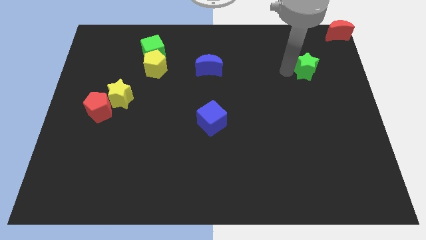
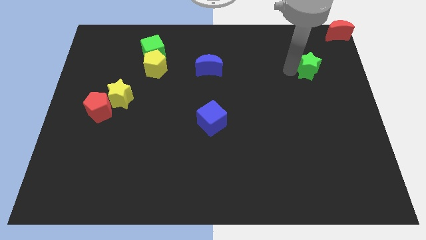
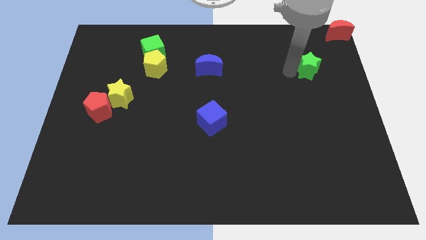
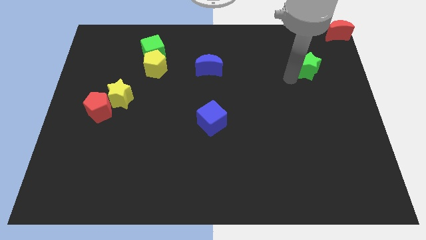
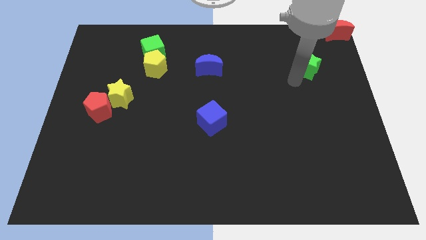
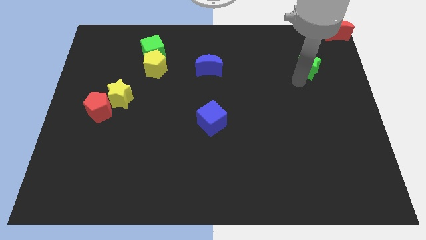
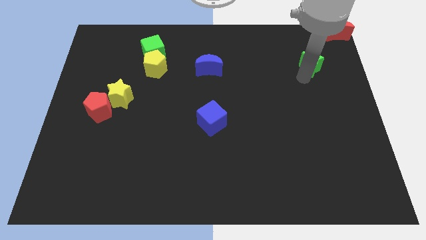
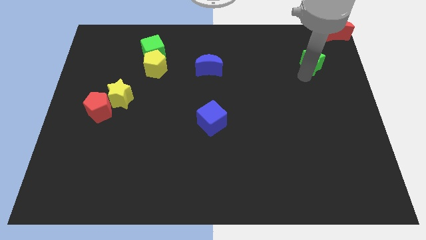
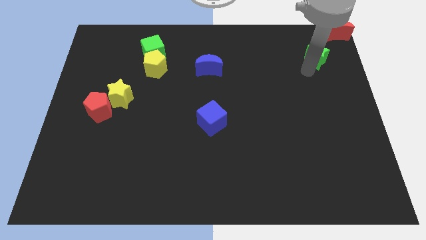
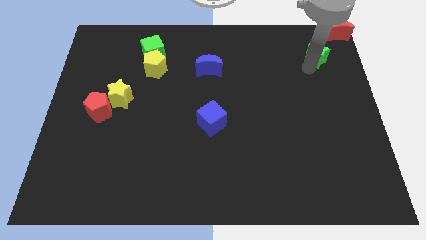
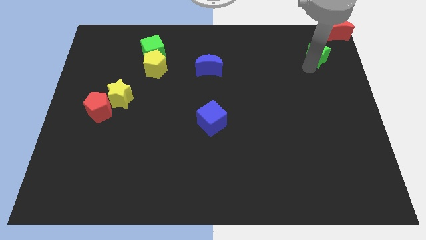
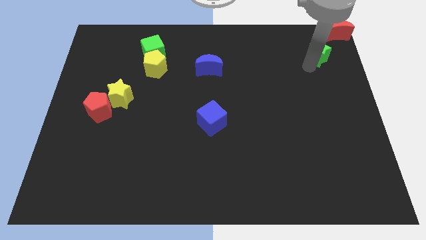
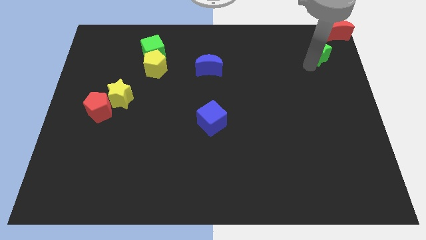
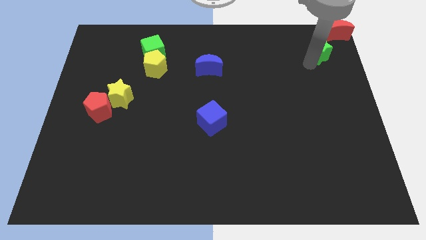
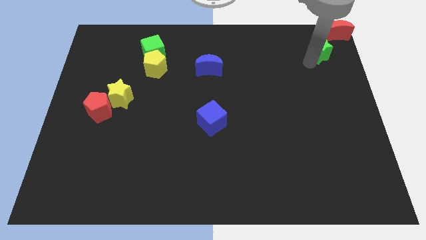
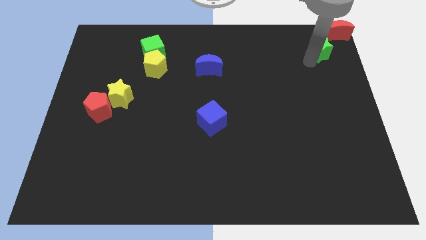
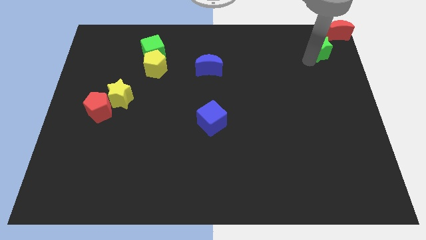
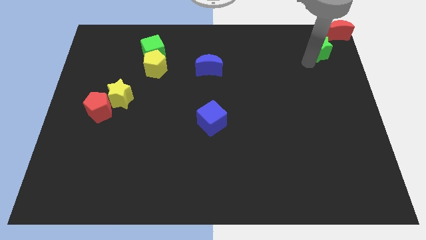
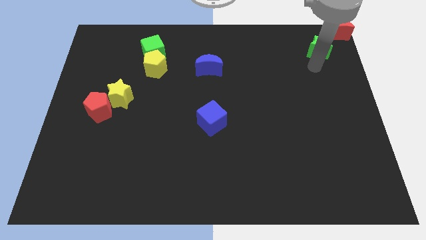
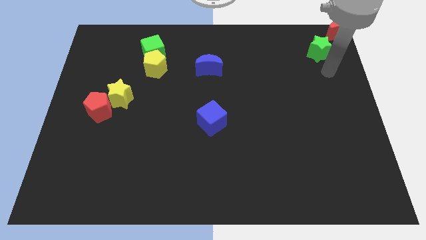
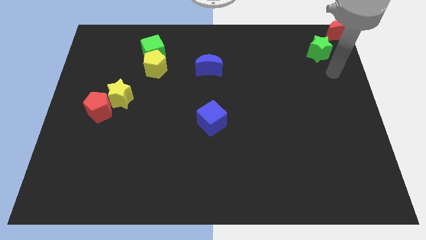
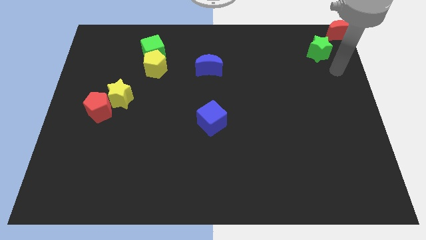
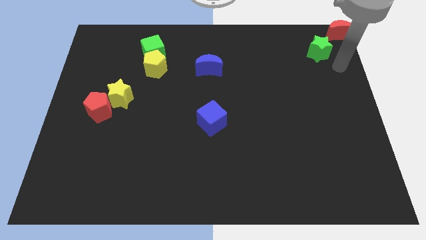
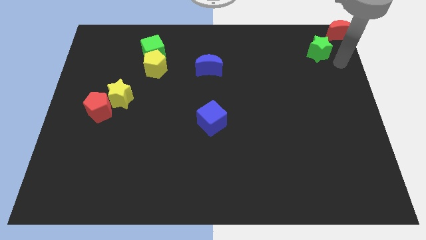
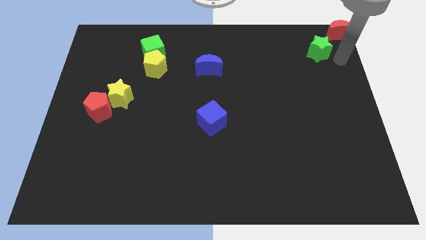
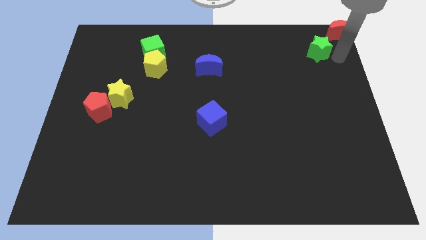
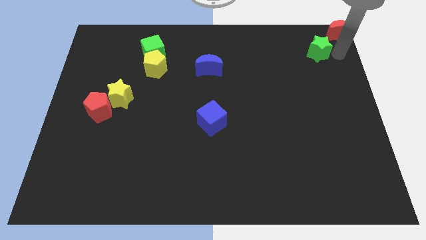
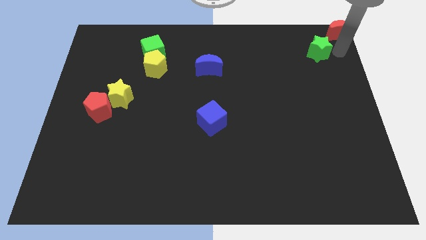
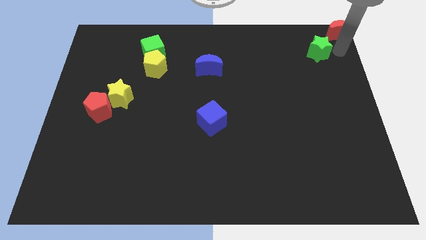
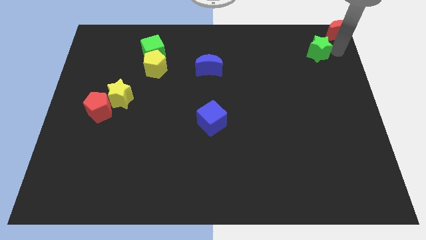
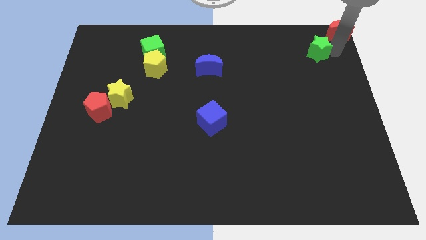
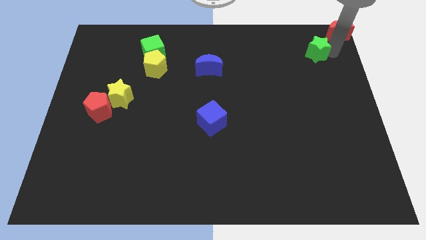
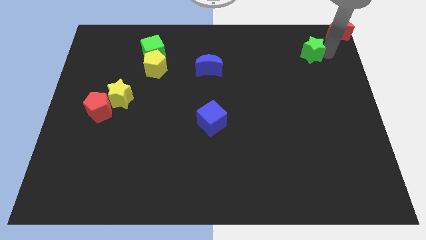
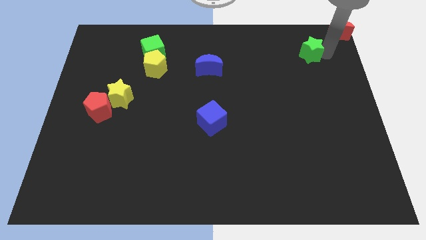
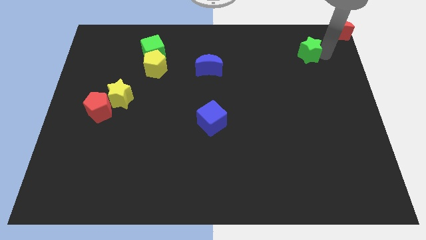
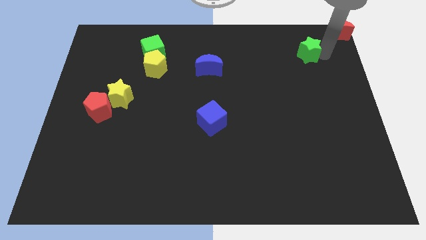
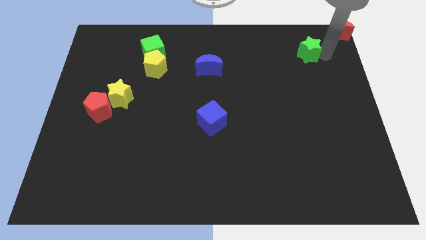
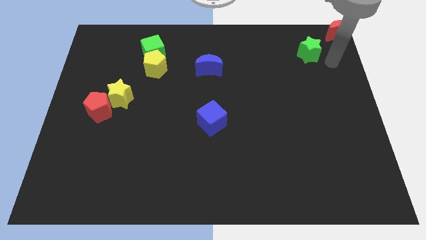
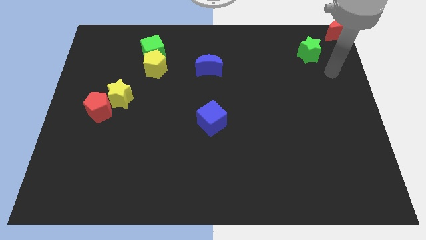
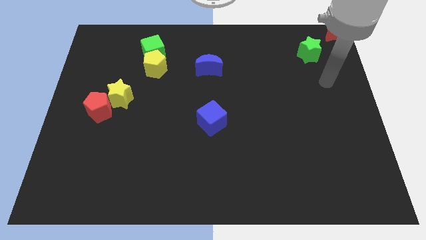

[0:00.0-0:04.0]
place the green star diagonal bottom left of red moon

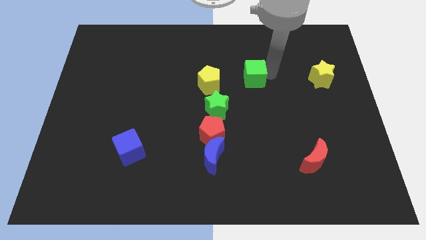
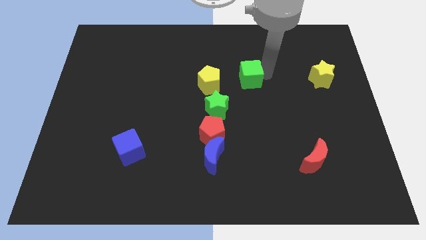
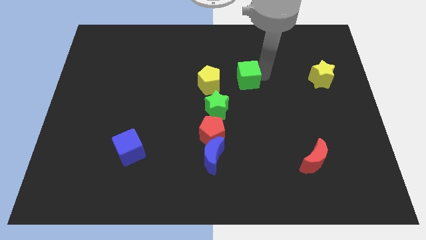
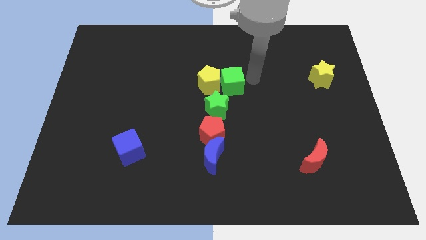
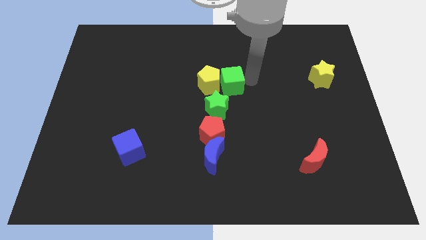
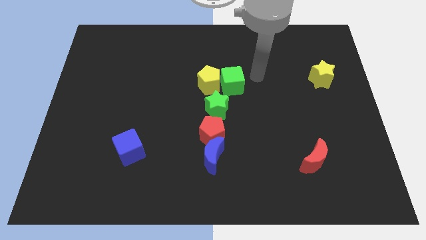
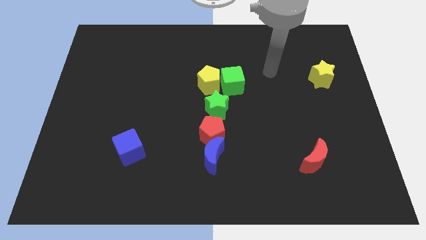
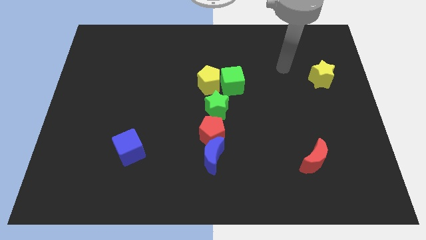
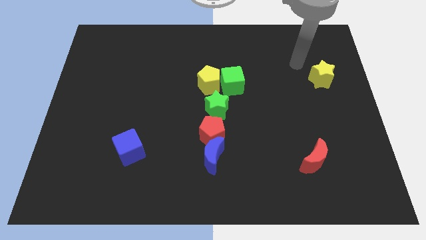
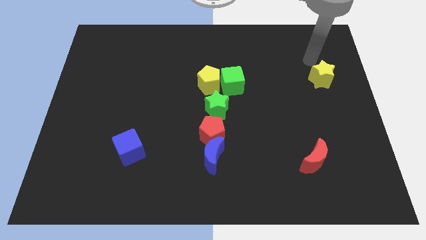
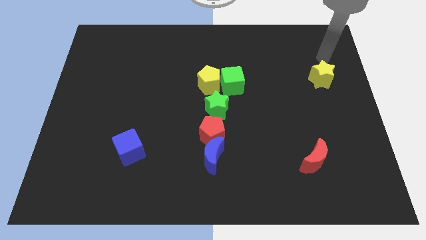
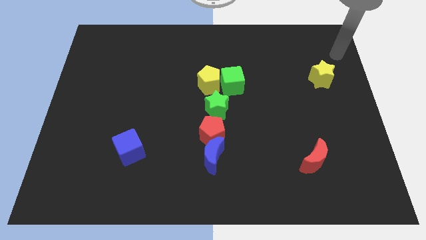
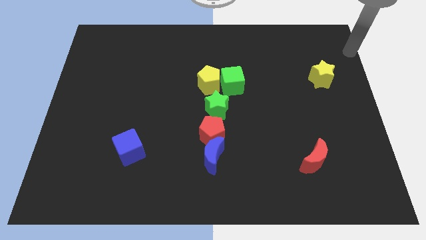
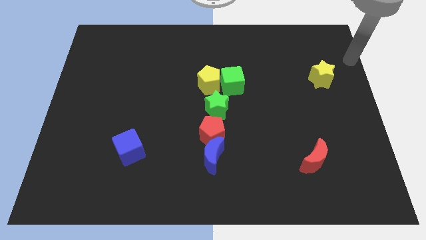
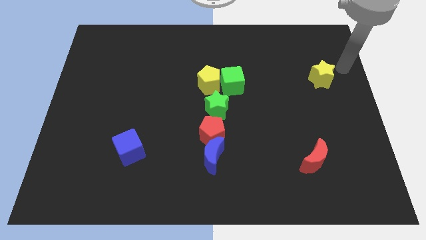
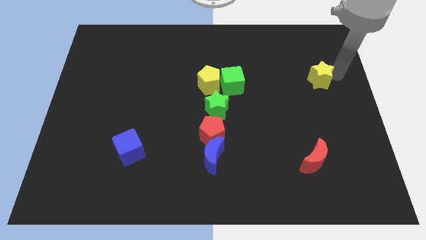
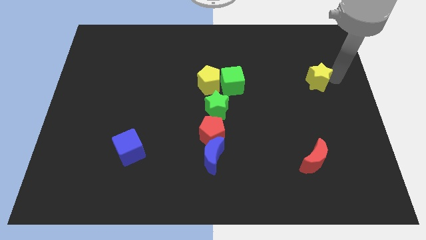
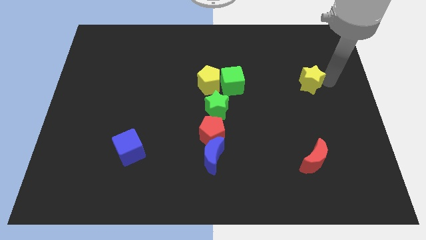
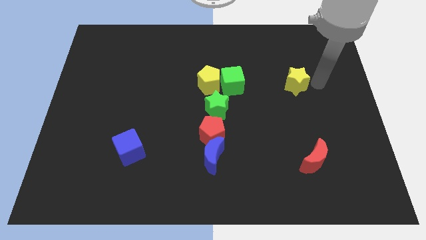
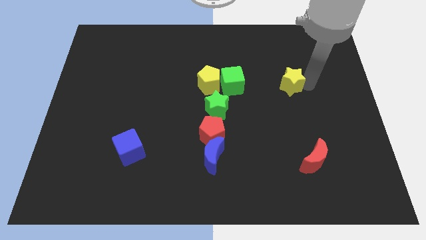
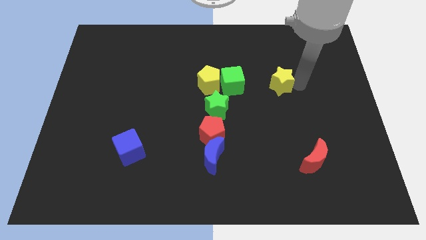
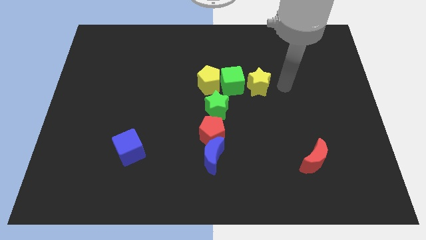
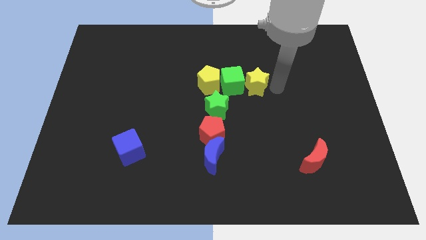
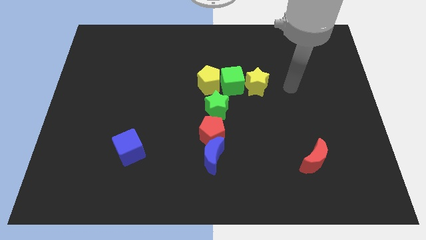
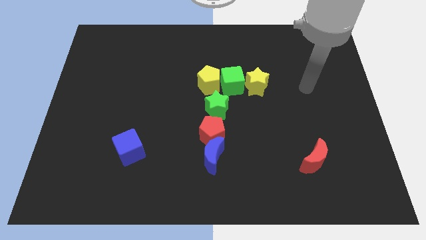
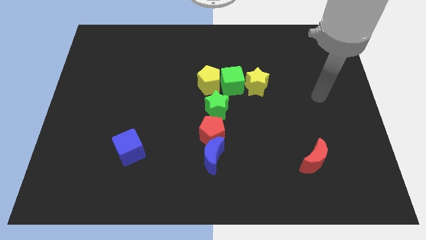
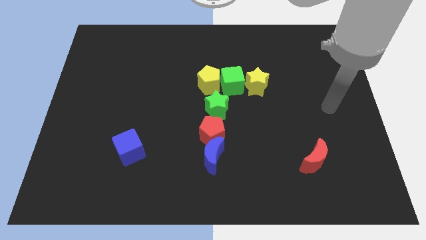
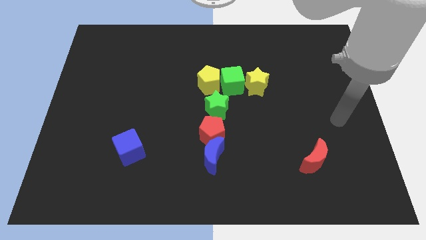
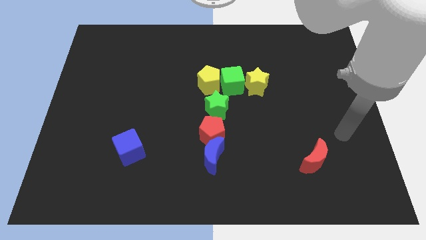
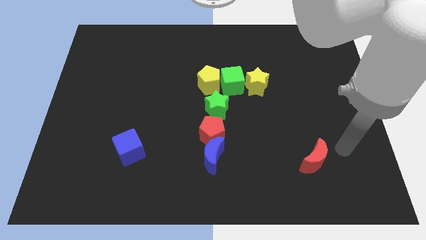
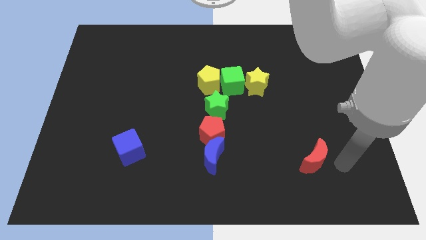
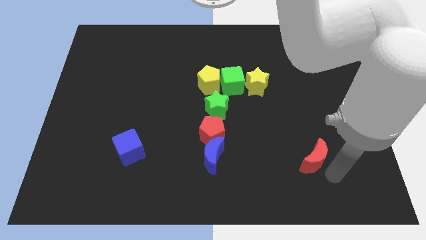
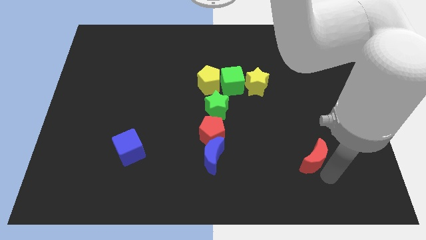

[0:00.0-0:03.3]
push yellow star in to green cube

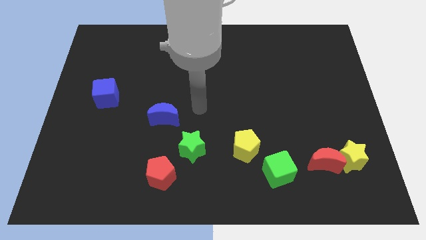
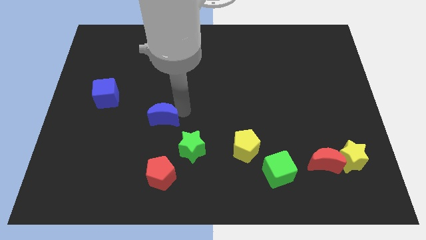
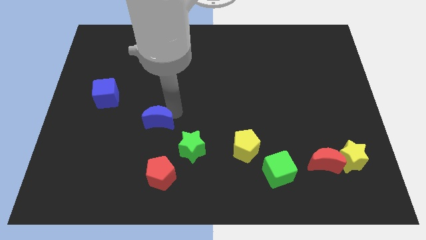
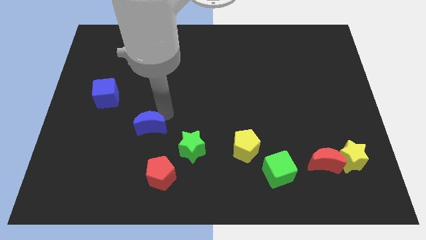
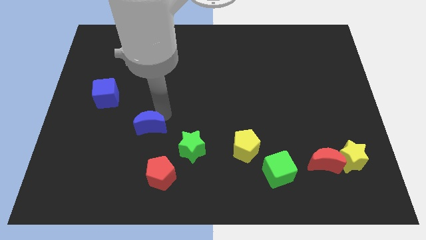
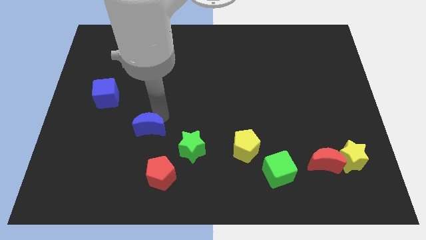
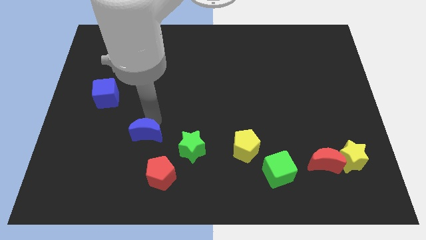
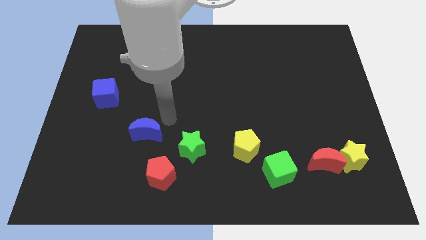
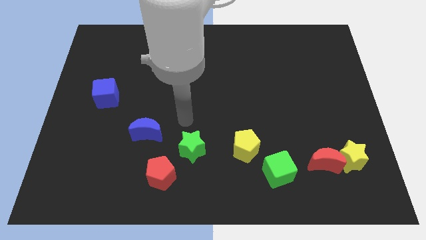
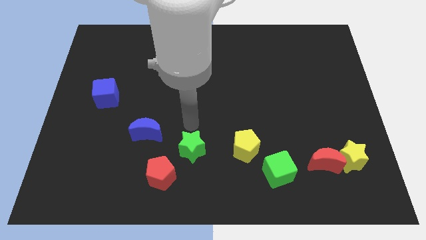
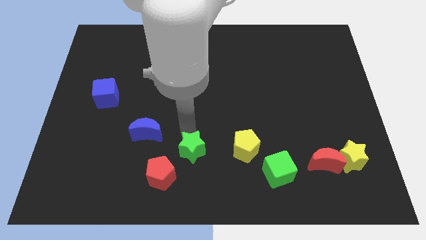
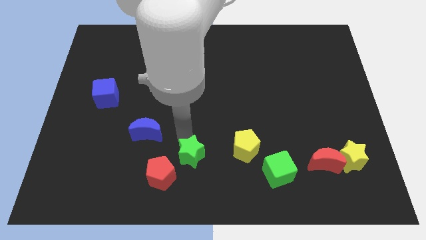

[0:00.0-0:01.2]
push the blue moon downwards

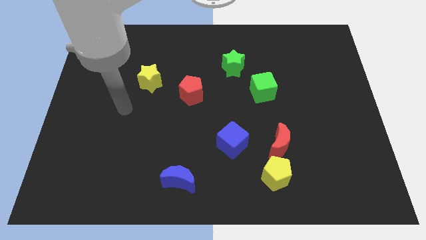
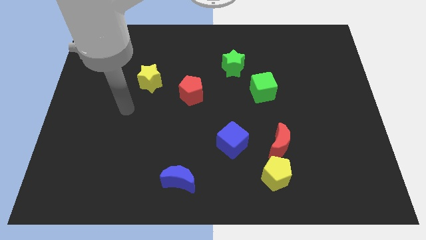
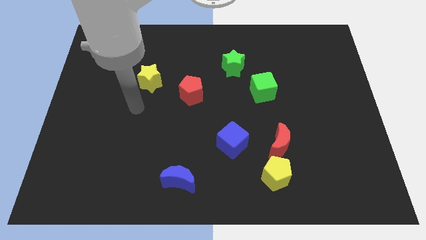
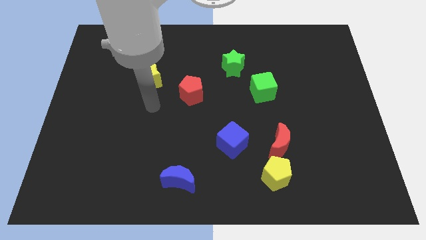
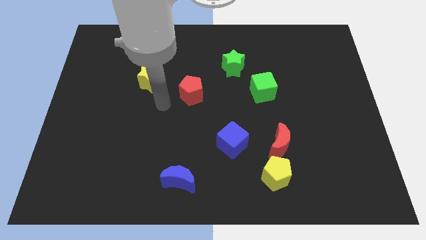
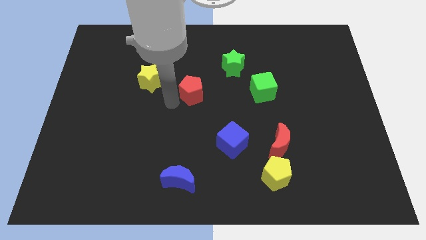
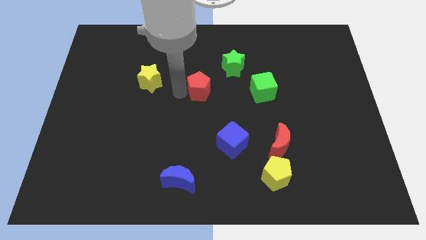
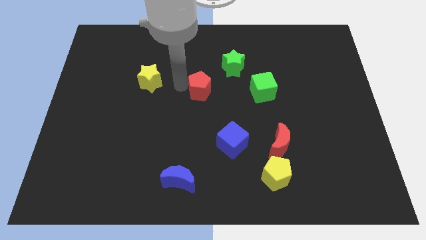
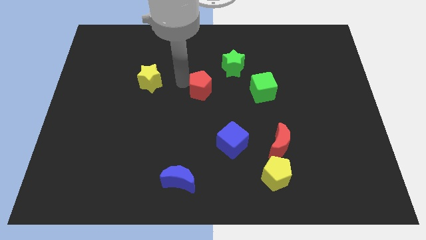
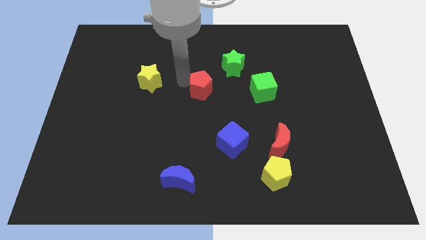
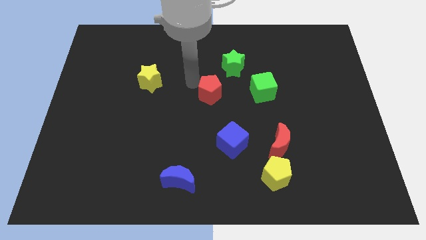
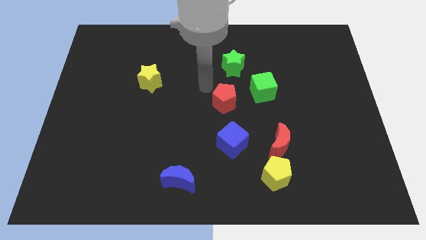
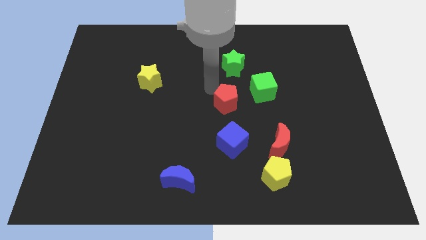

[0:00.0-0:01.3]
move the red pentagon towards the center of the board
